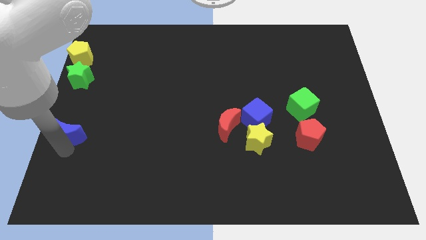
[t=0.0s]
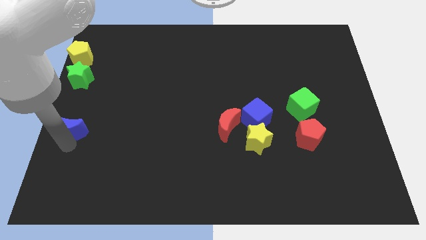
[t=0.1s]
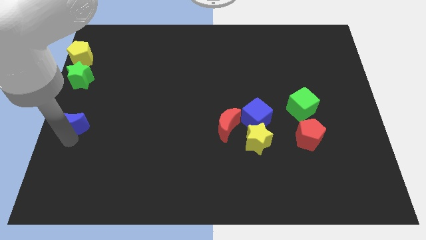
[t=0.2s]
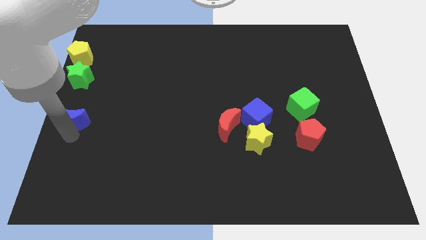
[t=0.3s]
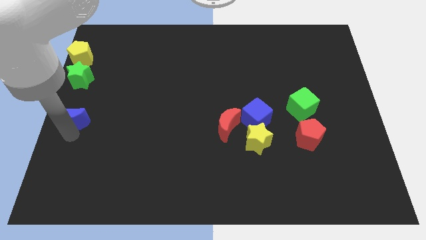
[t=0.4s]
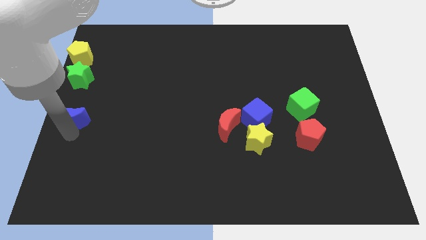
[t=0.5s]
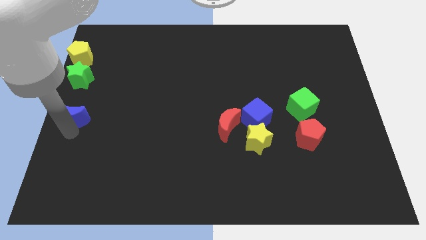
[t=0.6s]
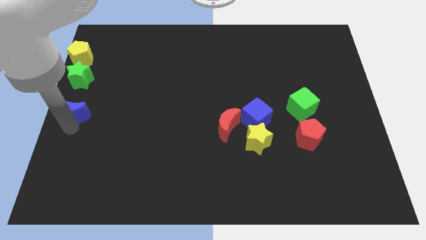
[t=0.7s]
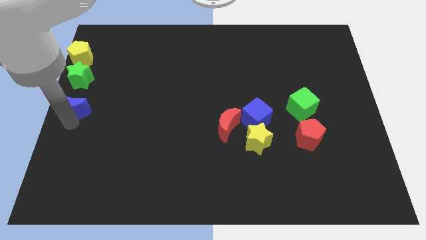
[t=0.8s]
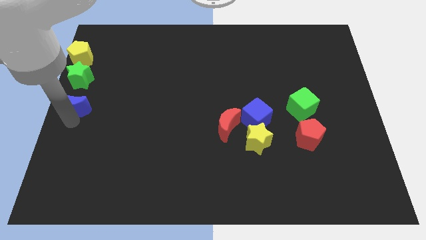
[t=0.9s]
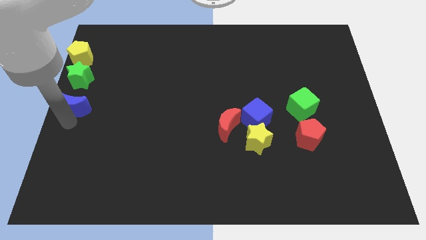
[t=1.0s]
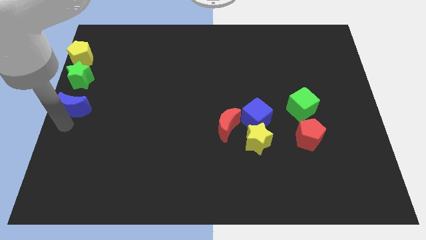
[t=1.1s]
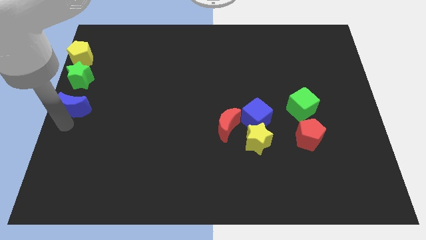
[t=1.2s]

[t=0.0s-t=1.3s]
push the blue crescent towards the green star

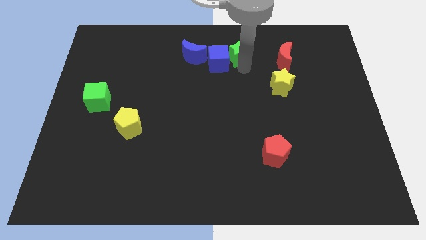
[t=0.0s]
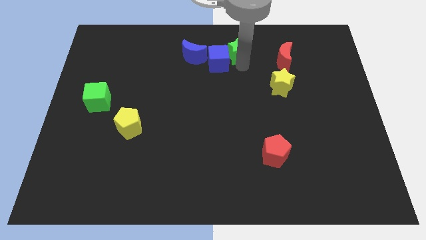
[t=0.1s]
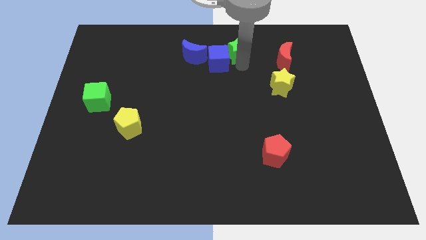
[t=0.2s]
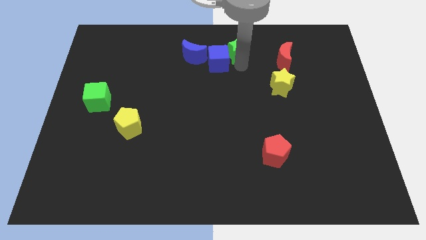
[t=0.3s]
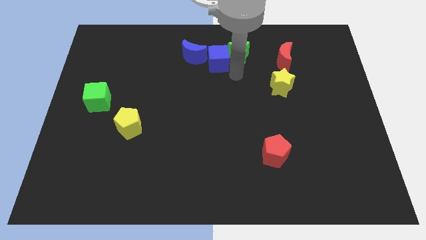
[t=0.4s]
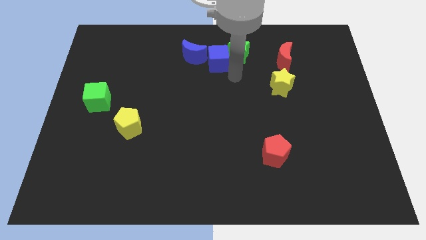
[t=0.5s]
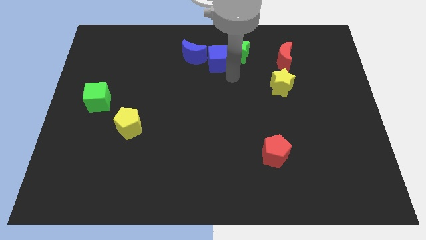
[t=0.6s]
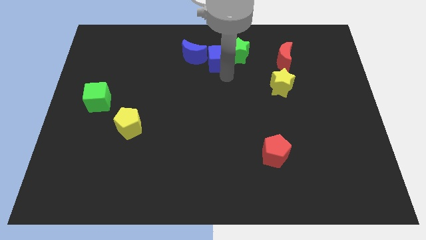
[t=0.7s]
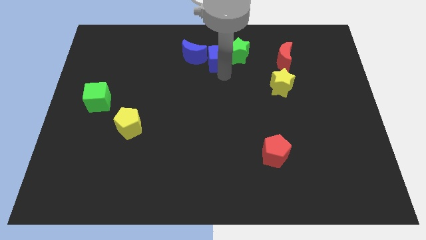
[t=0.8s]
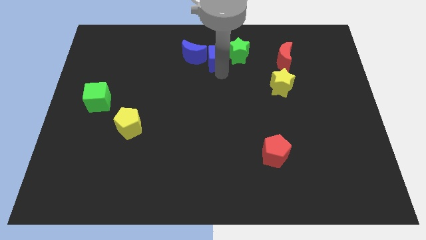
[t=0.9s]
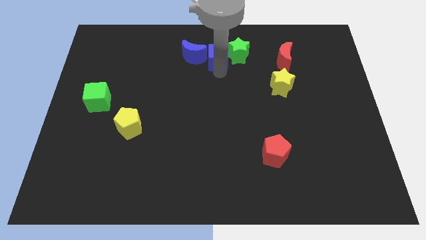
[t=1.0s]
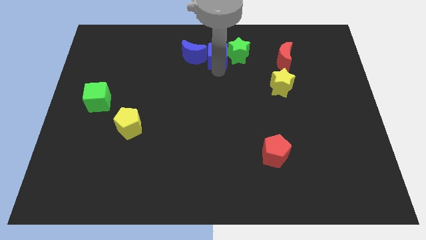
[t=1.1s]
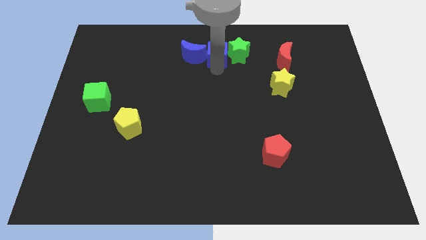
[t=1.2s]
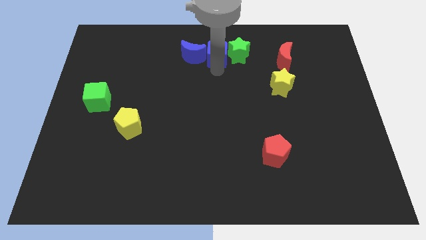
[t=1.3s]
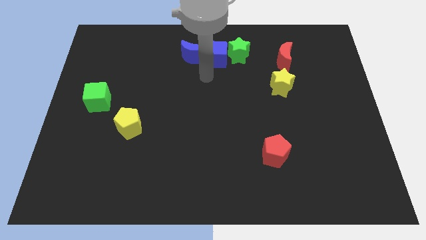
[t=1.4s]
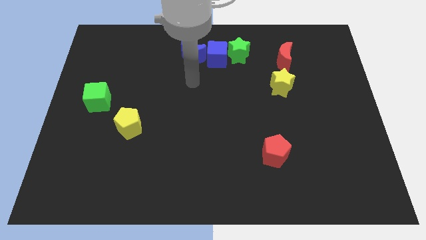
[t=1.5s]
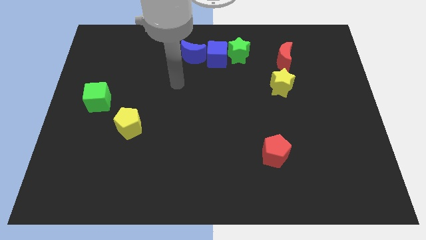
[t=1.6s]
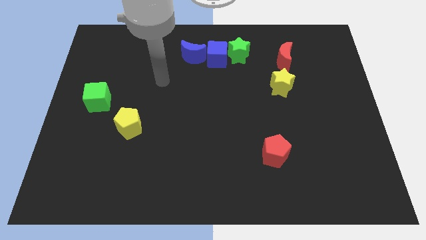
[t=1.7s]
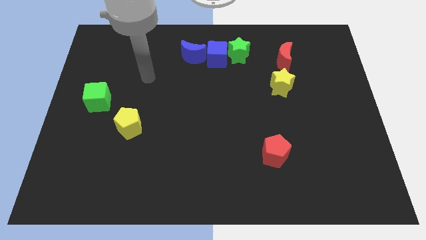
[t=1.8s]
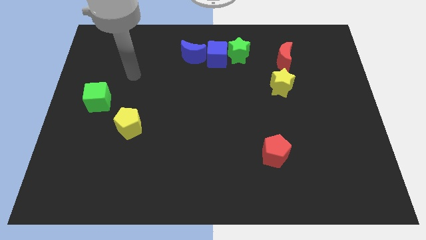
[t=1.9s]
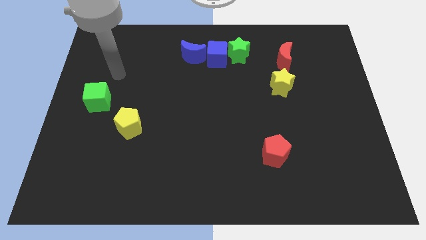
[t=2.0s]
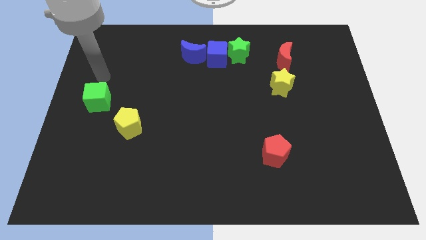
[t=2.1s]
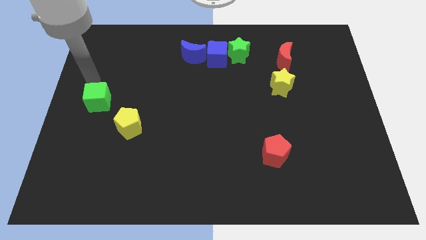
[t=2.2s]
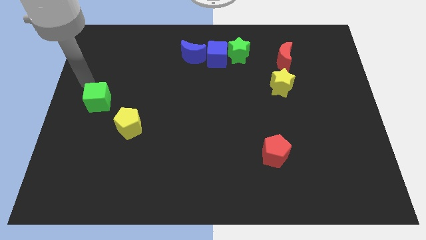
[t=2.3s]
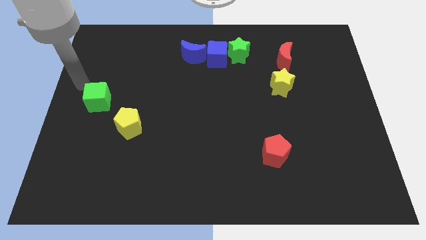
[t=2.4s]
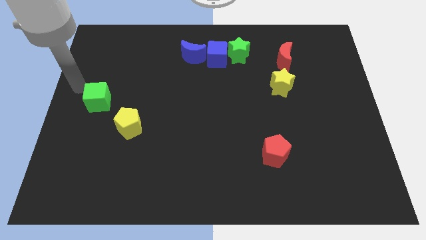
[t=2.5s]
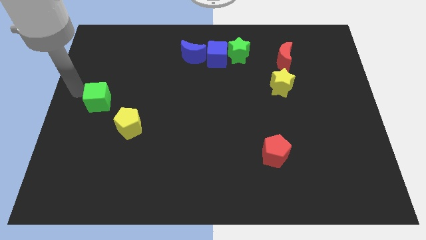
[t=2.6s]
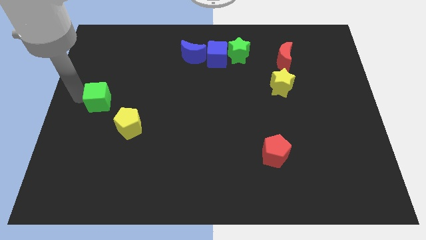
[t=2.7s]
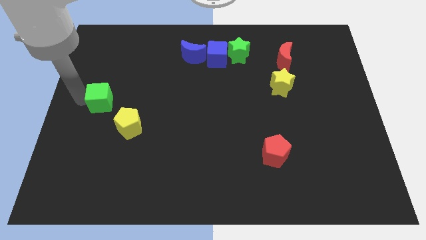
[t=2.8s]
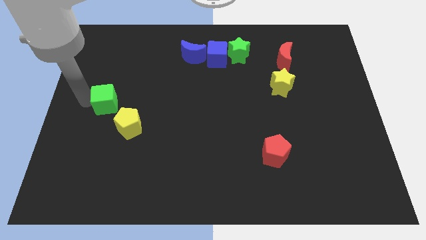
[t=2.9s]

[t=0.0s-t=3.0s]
move your arm to the left of green cube

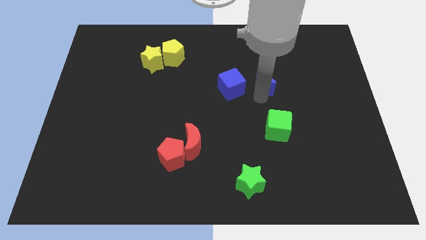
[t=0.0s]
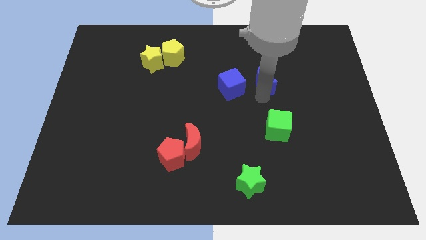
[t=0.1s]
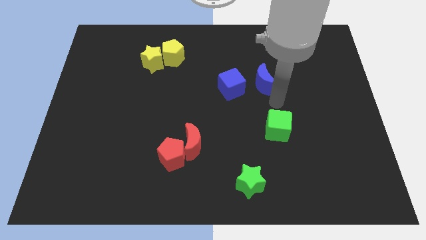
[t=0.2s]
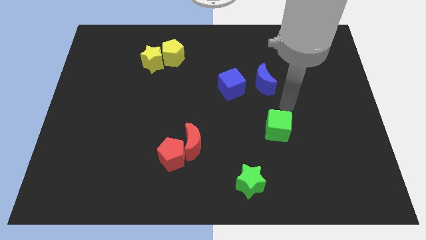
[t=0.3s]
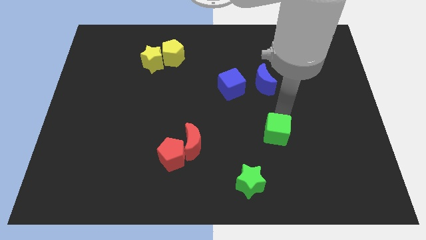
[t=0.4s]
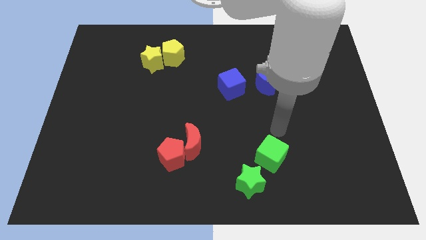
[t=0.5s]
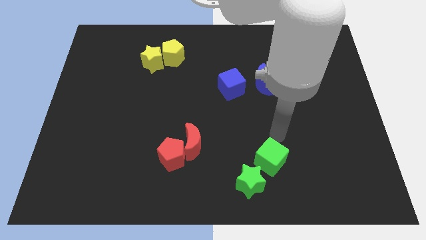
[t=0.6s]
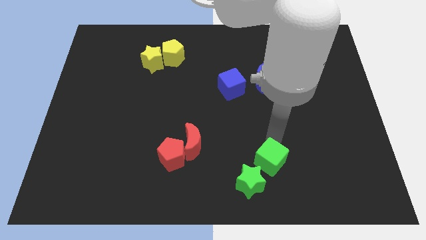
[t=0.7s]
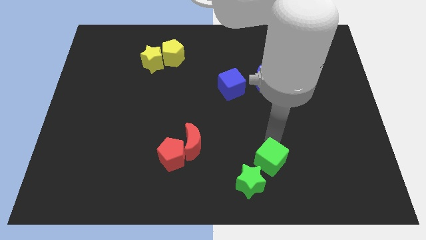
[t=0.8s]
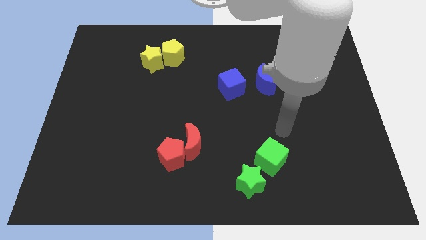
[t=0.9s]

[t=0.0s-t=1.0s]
push the green cube close to the green star

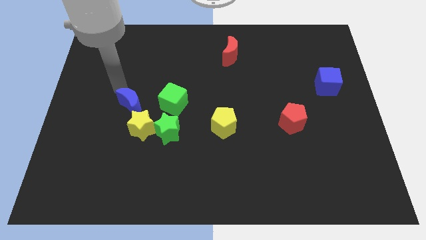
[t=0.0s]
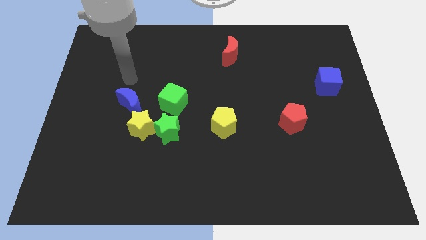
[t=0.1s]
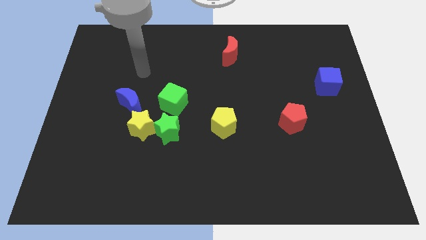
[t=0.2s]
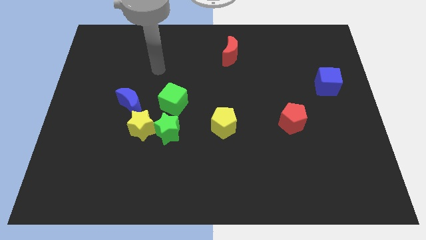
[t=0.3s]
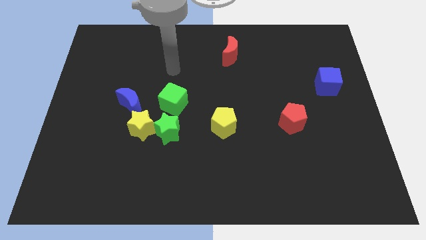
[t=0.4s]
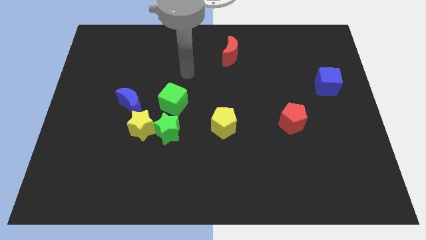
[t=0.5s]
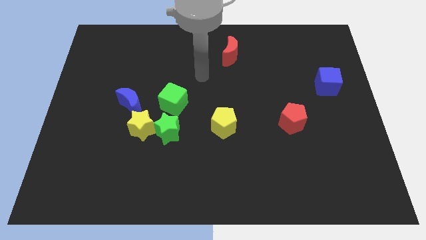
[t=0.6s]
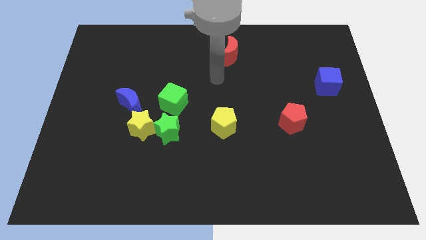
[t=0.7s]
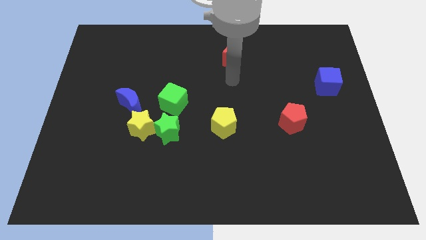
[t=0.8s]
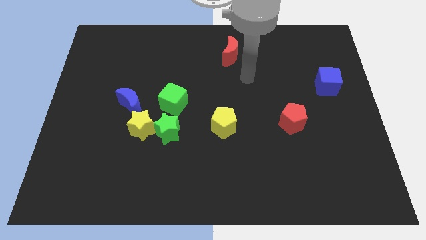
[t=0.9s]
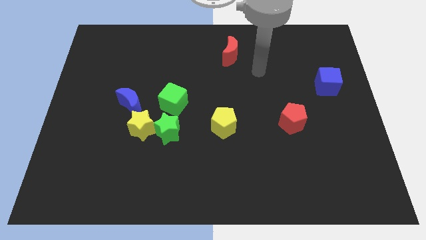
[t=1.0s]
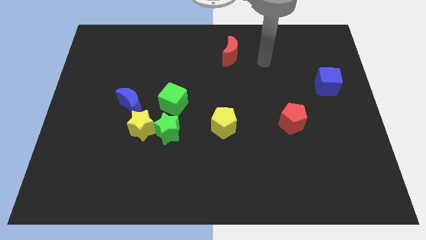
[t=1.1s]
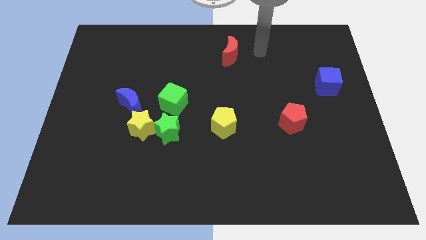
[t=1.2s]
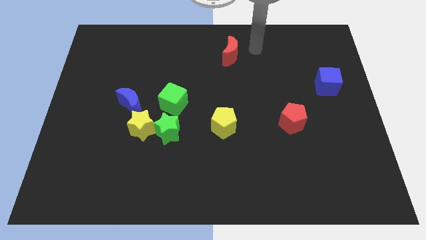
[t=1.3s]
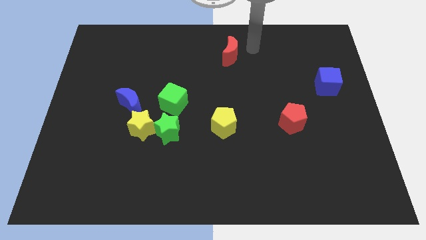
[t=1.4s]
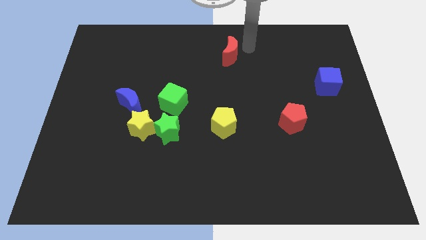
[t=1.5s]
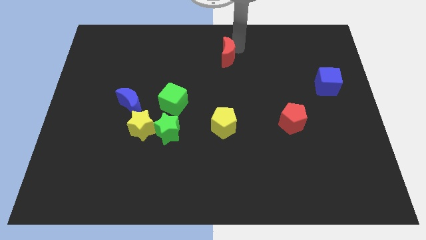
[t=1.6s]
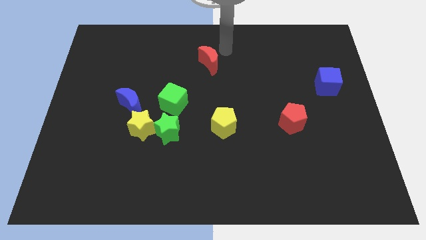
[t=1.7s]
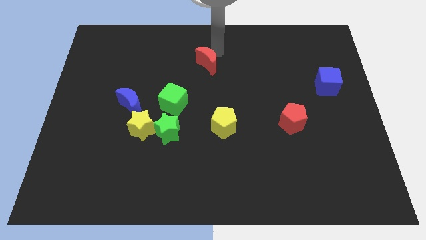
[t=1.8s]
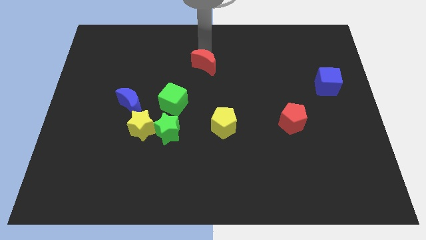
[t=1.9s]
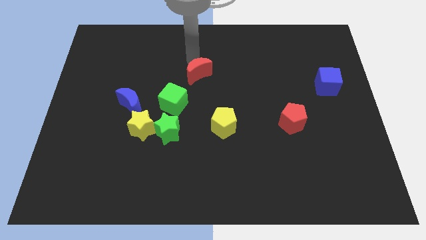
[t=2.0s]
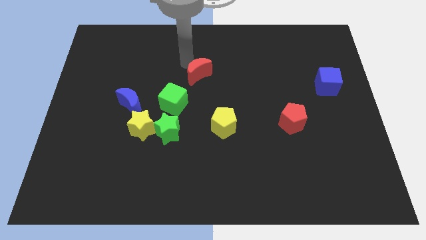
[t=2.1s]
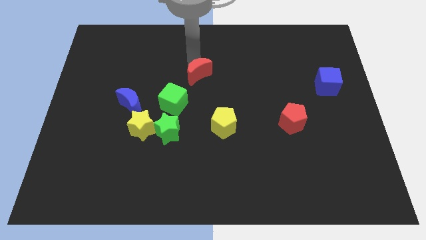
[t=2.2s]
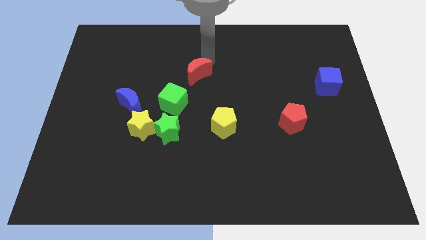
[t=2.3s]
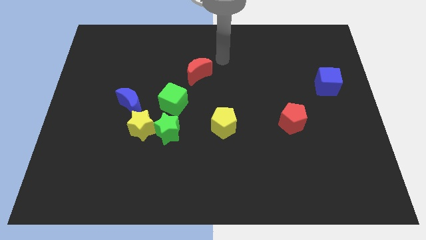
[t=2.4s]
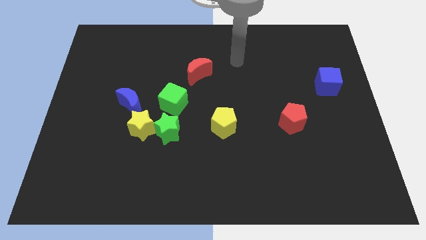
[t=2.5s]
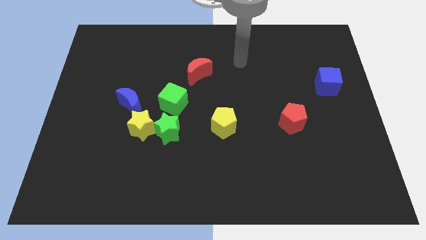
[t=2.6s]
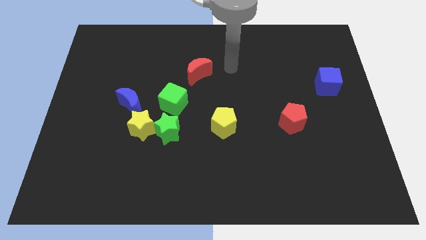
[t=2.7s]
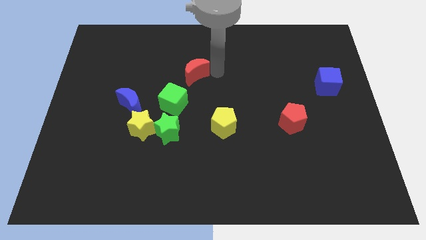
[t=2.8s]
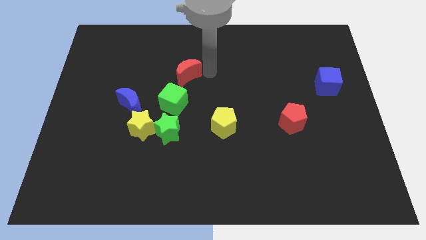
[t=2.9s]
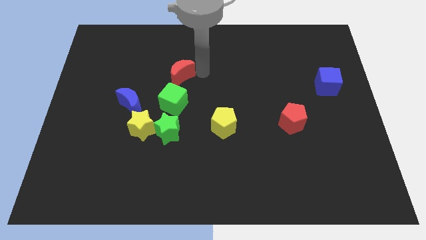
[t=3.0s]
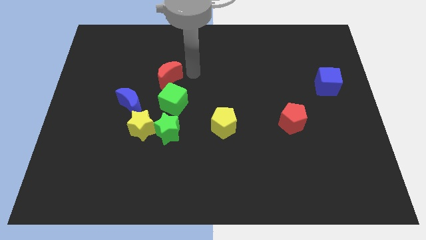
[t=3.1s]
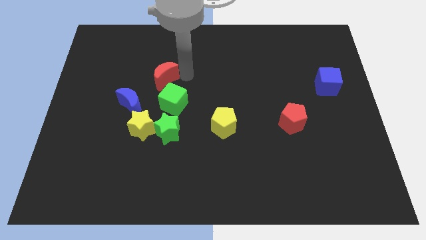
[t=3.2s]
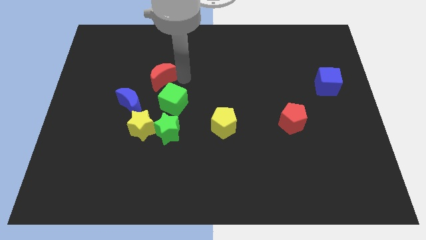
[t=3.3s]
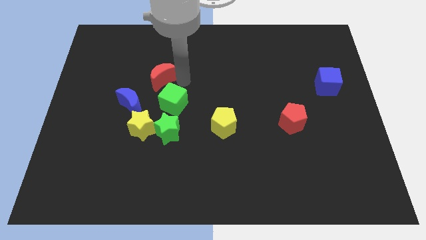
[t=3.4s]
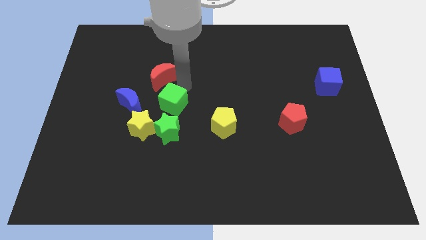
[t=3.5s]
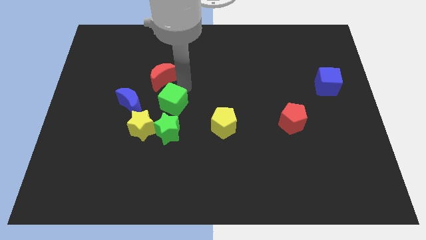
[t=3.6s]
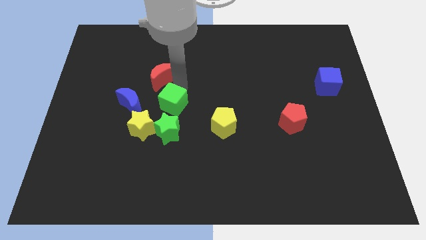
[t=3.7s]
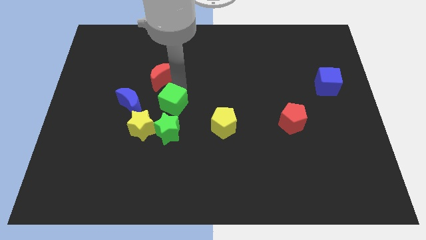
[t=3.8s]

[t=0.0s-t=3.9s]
put the red moon at the top left side of green cube
